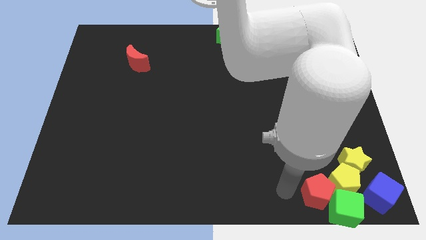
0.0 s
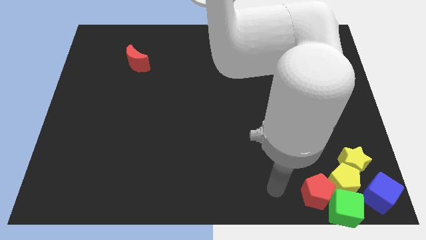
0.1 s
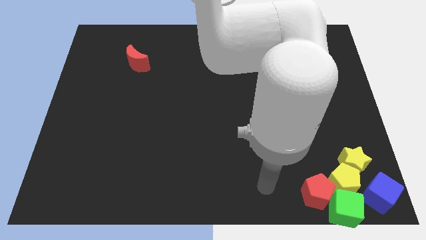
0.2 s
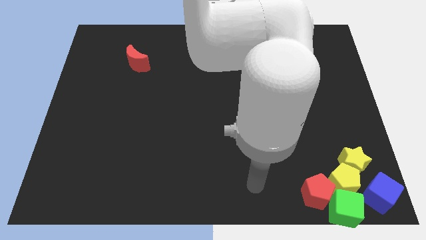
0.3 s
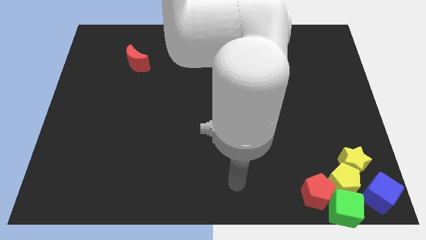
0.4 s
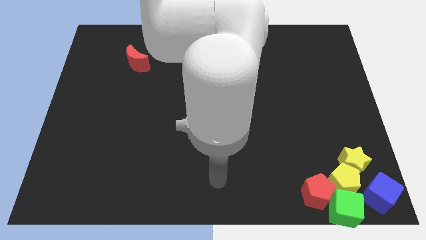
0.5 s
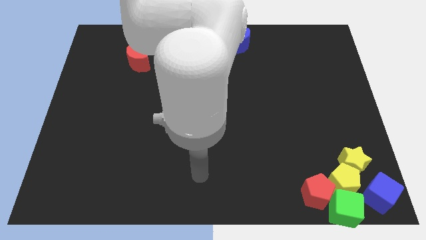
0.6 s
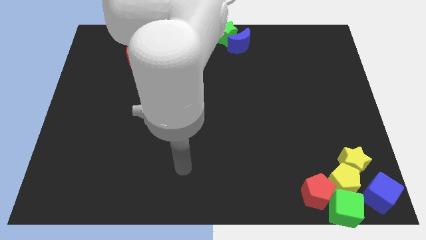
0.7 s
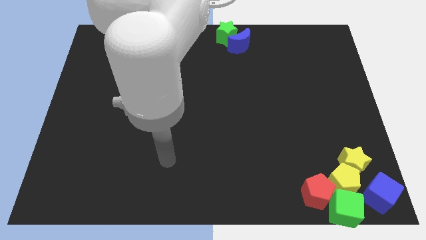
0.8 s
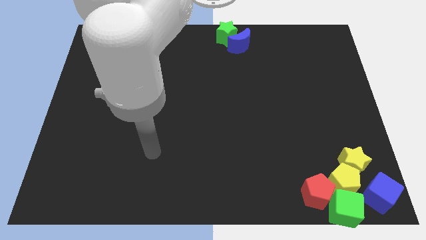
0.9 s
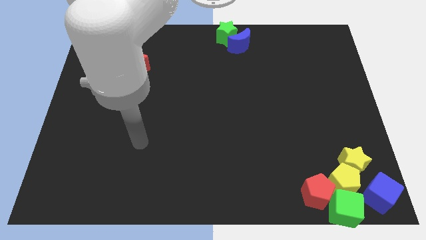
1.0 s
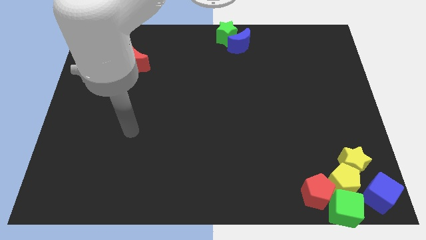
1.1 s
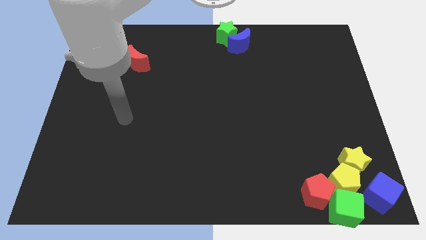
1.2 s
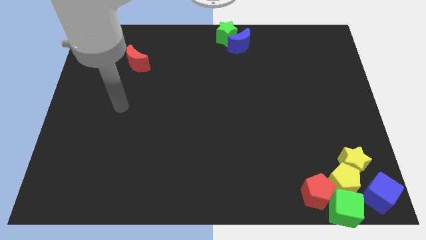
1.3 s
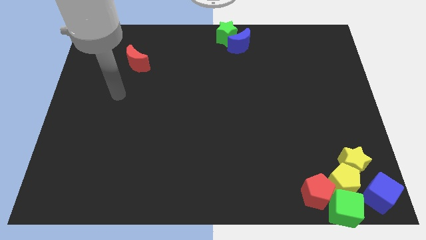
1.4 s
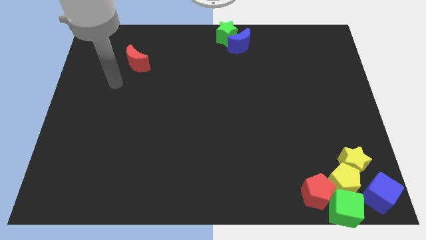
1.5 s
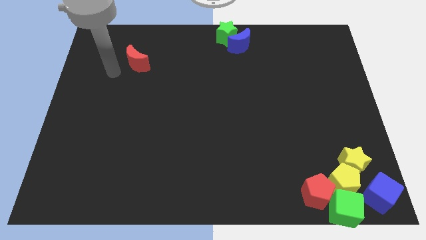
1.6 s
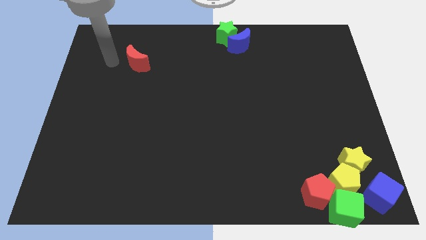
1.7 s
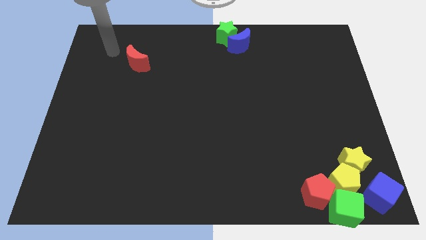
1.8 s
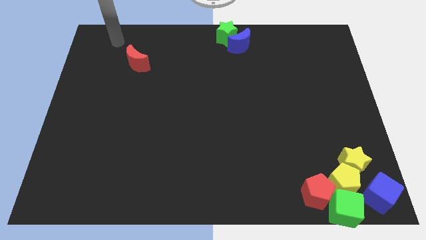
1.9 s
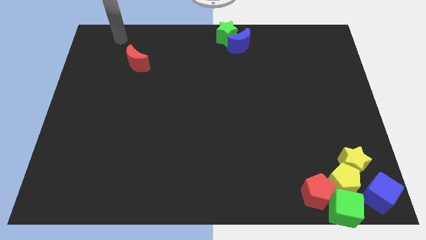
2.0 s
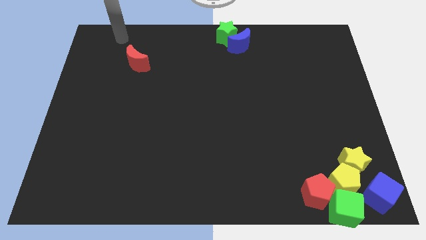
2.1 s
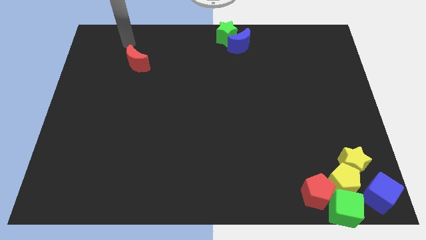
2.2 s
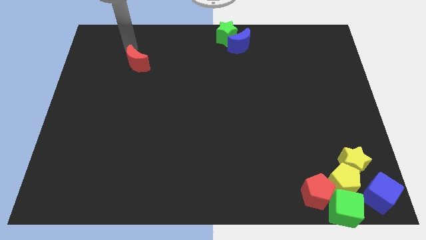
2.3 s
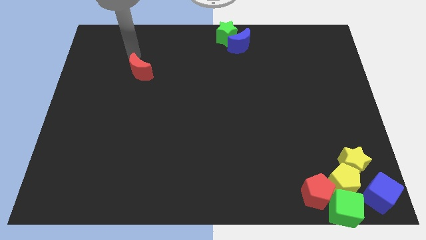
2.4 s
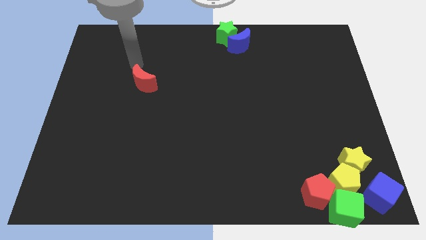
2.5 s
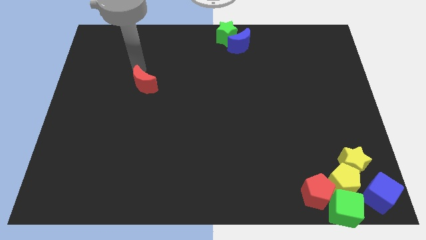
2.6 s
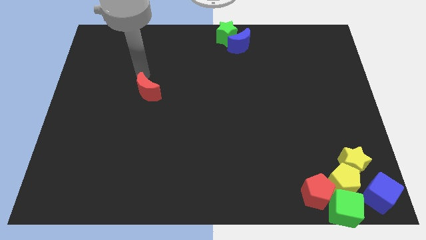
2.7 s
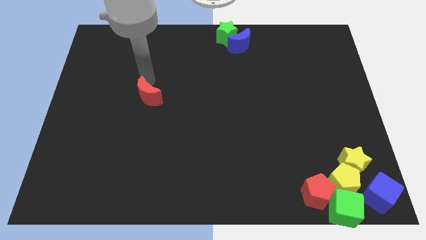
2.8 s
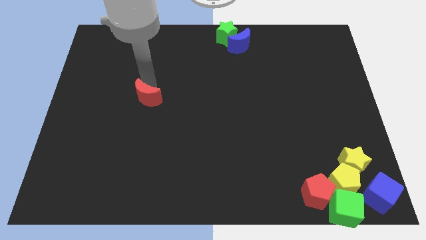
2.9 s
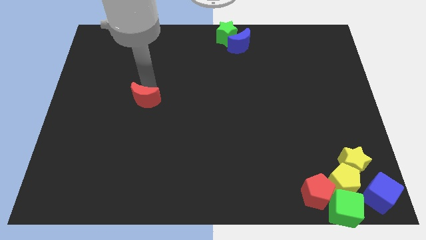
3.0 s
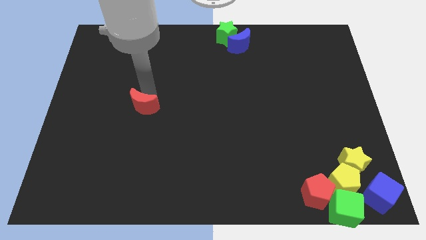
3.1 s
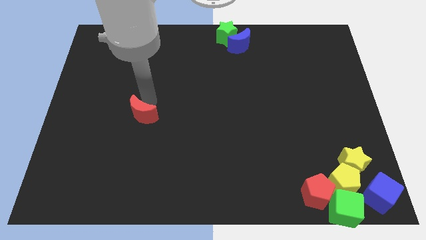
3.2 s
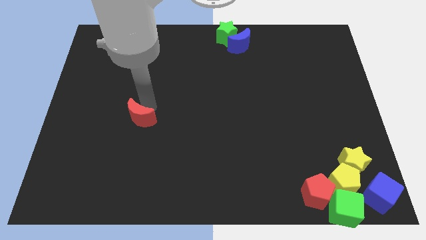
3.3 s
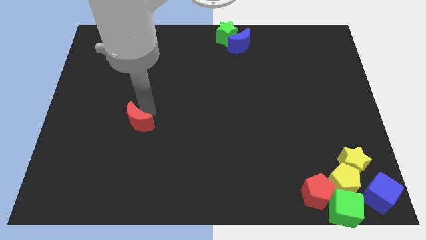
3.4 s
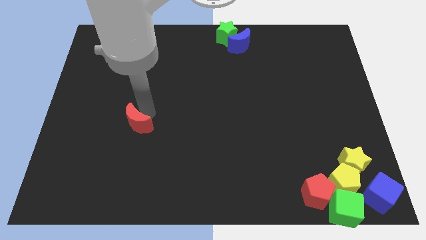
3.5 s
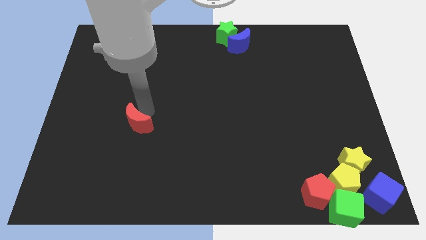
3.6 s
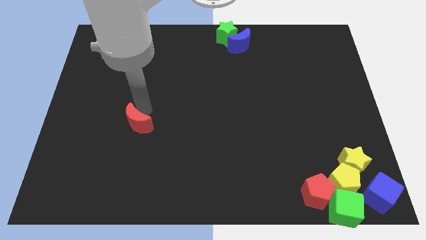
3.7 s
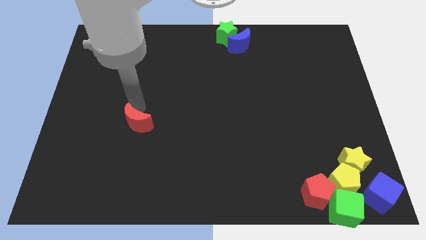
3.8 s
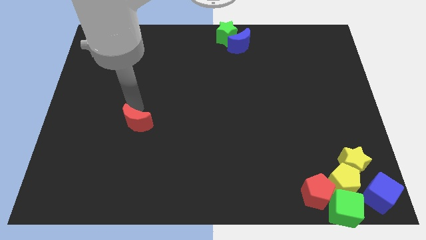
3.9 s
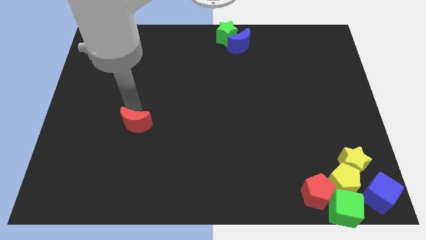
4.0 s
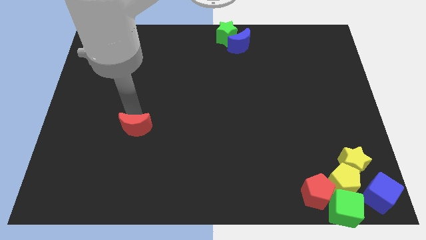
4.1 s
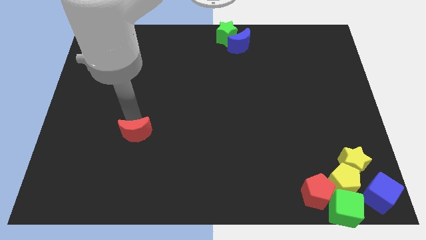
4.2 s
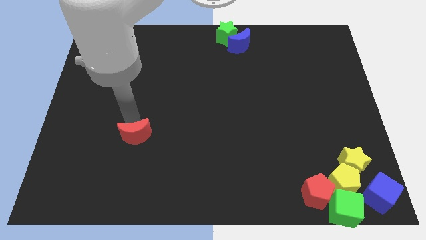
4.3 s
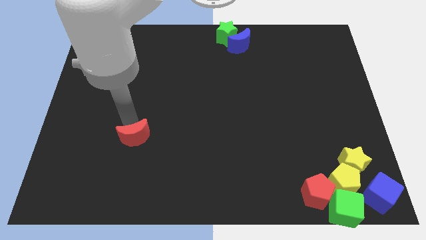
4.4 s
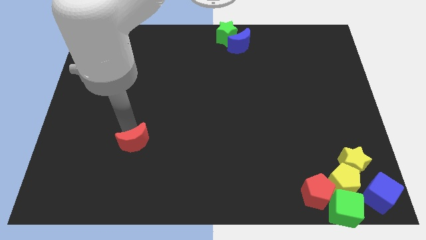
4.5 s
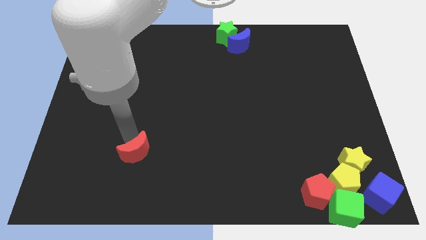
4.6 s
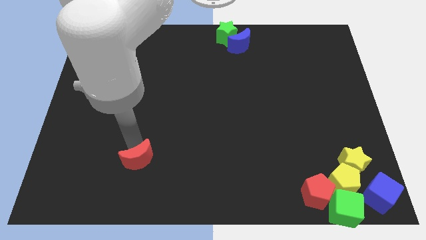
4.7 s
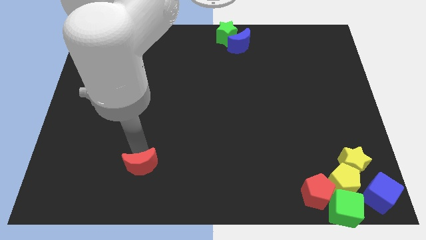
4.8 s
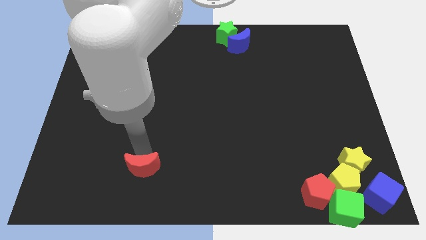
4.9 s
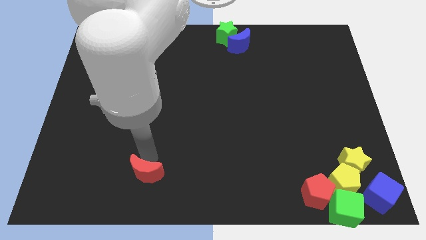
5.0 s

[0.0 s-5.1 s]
push the red crescent towards the bottom of board

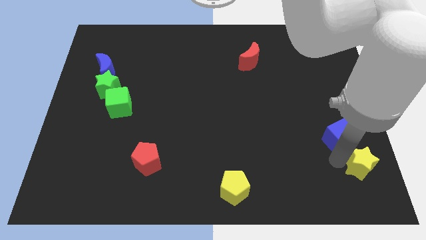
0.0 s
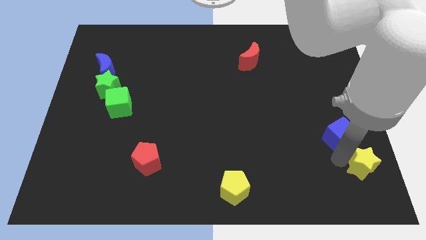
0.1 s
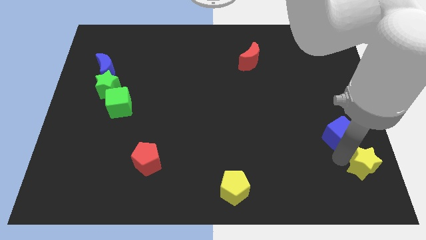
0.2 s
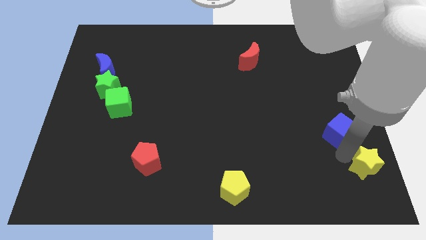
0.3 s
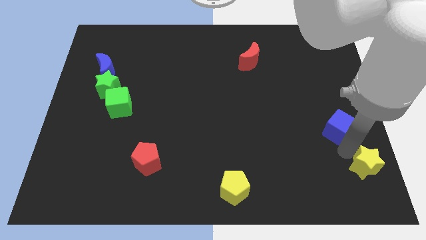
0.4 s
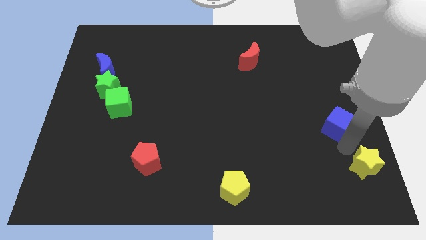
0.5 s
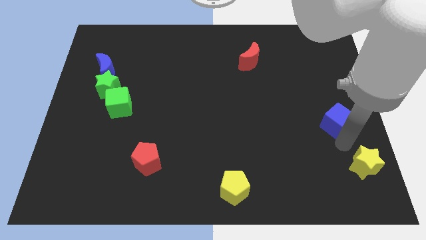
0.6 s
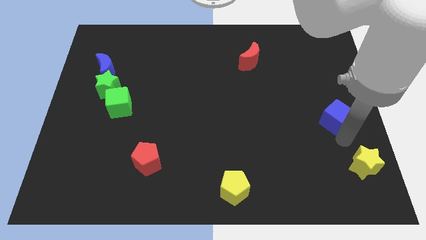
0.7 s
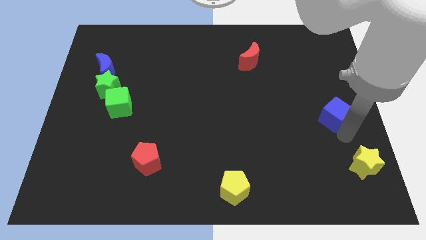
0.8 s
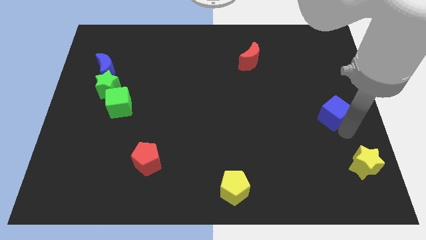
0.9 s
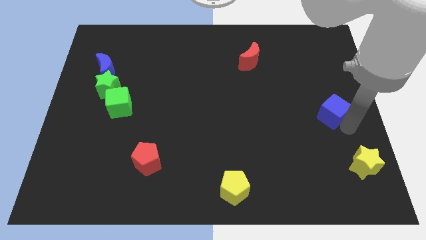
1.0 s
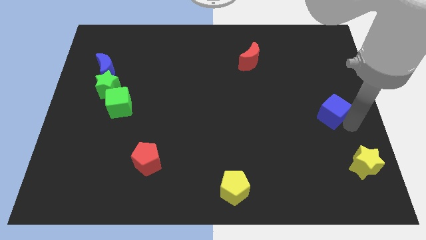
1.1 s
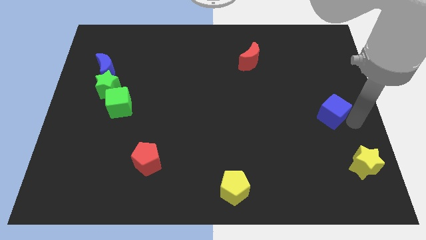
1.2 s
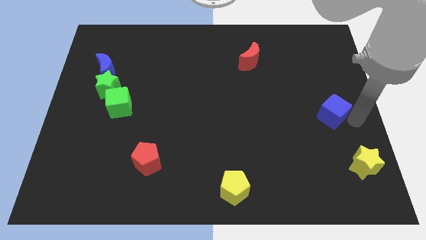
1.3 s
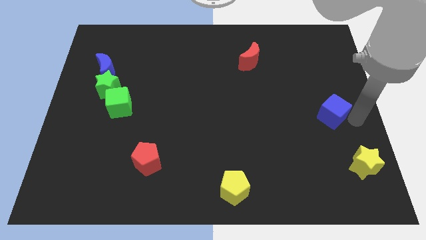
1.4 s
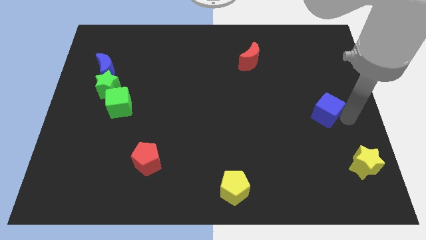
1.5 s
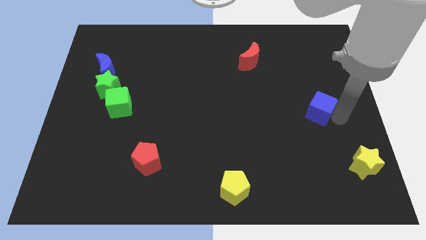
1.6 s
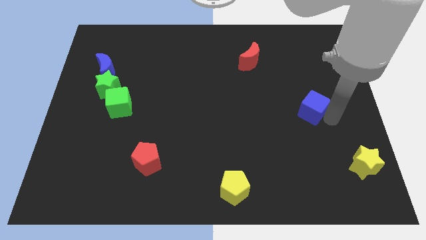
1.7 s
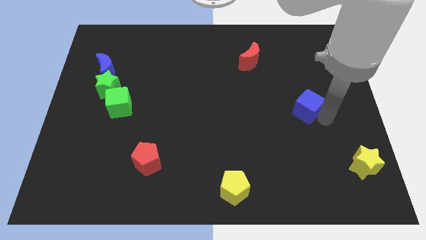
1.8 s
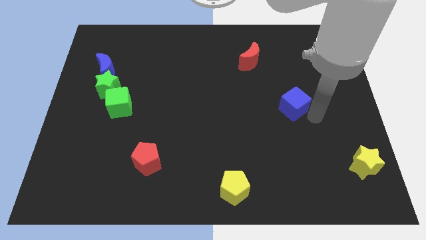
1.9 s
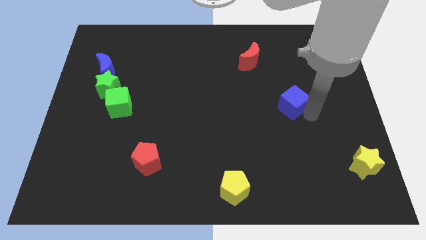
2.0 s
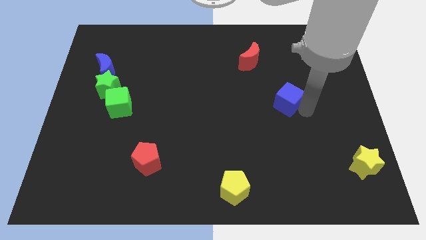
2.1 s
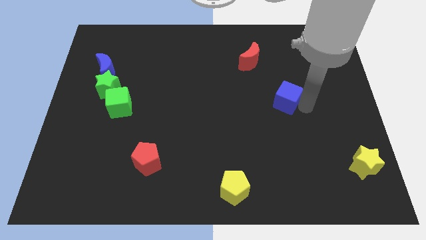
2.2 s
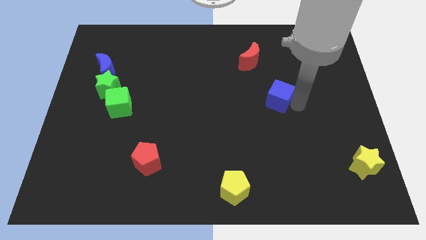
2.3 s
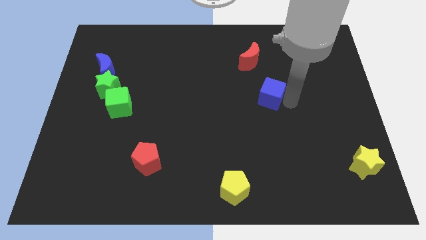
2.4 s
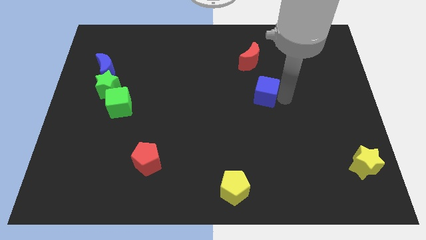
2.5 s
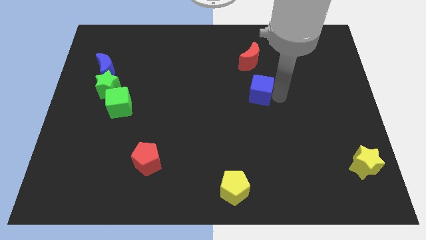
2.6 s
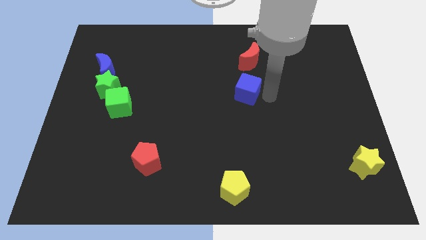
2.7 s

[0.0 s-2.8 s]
push the blue cube to the bottom of the red crescent

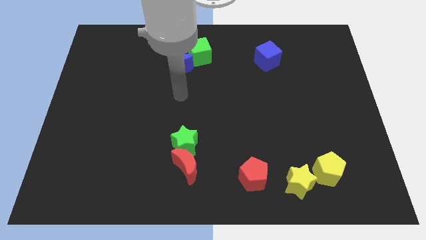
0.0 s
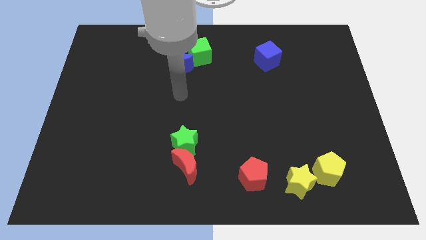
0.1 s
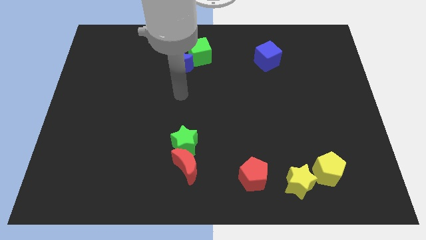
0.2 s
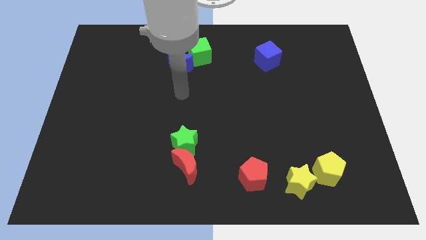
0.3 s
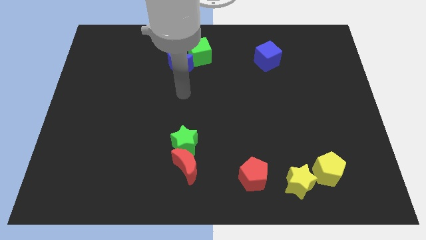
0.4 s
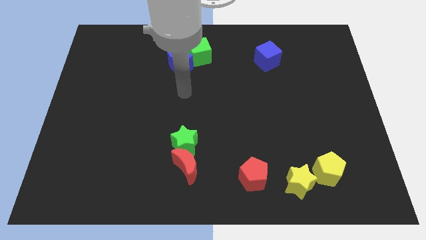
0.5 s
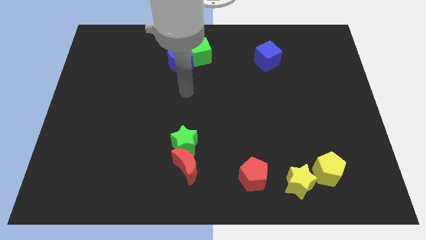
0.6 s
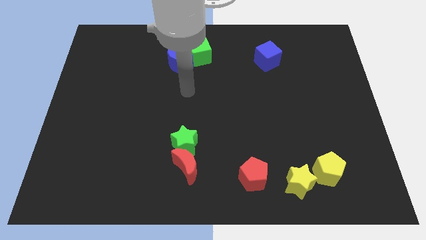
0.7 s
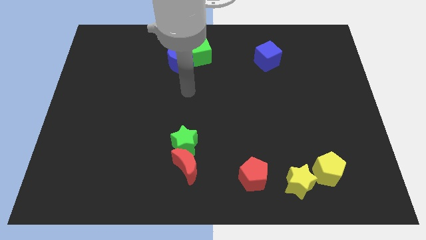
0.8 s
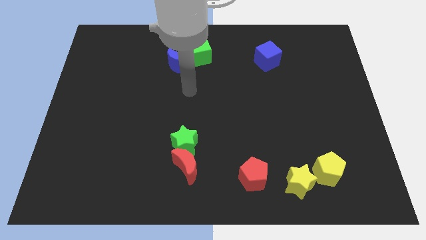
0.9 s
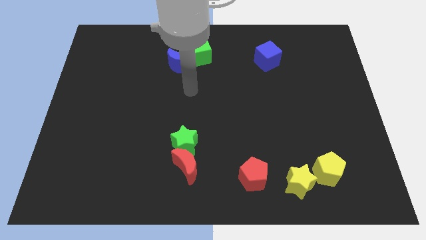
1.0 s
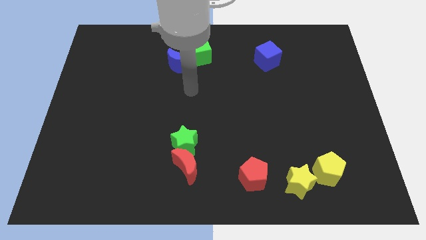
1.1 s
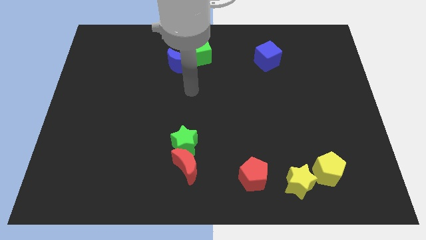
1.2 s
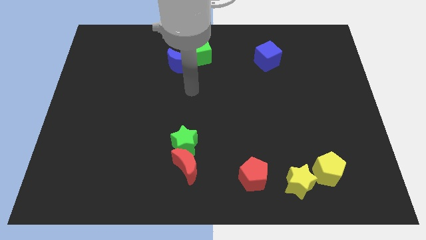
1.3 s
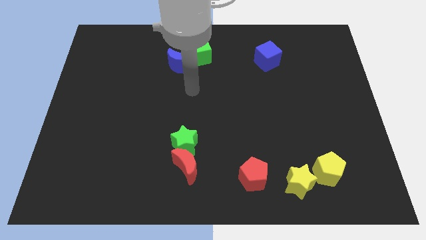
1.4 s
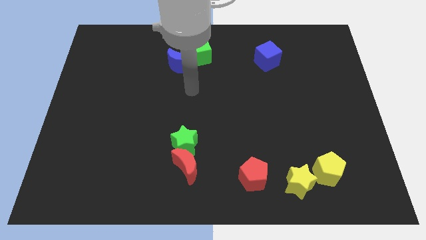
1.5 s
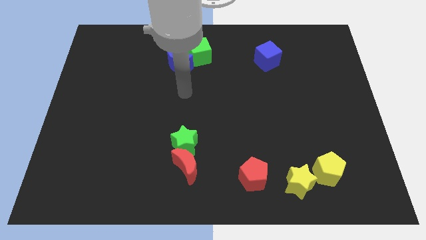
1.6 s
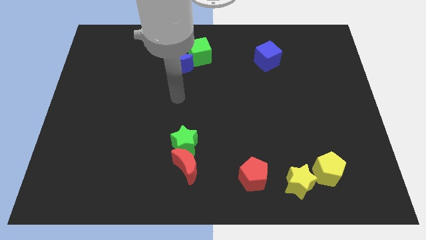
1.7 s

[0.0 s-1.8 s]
place your arm to the center of the board
